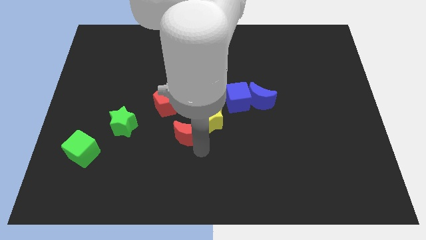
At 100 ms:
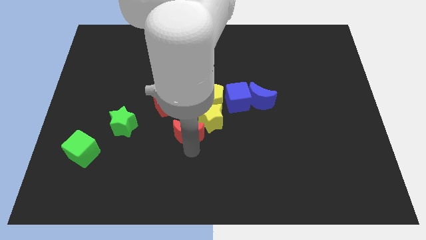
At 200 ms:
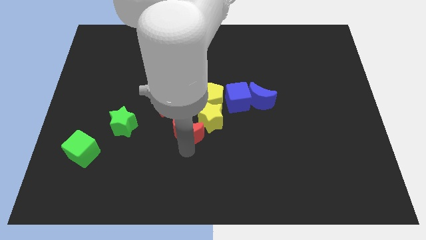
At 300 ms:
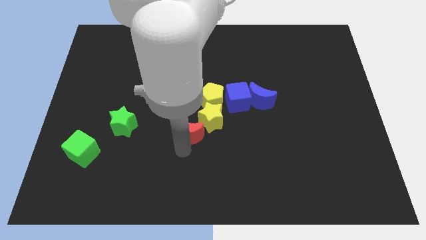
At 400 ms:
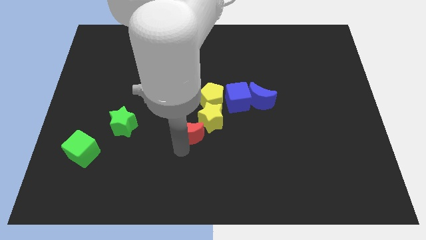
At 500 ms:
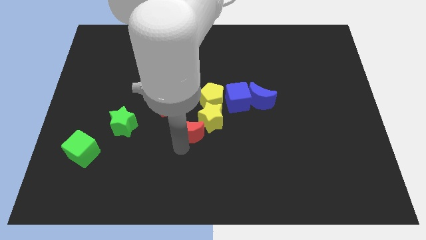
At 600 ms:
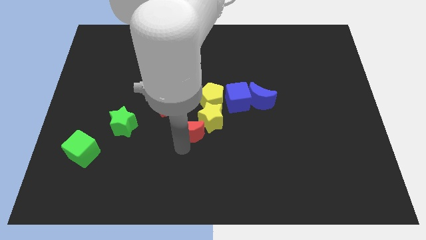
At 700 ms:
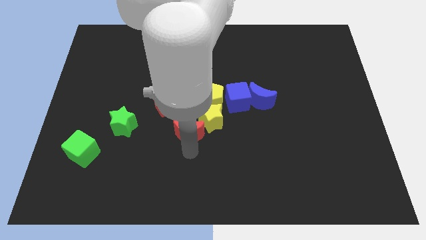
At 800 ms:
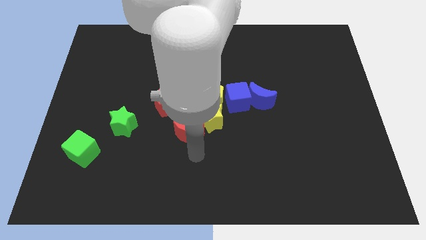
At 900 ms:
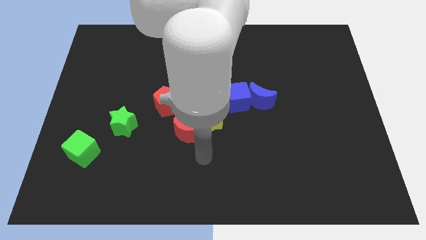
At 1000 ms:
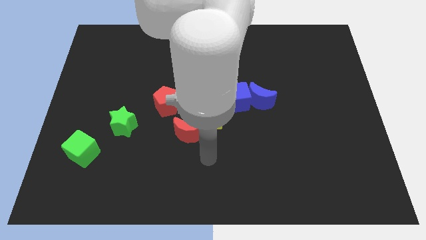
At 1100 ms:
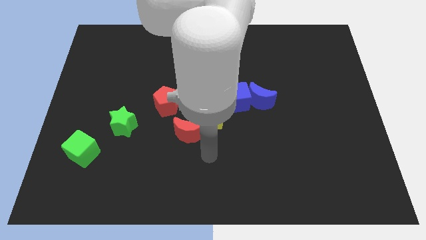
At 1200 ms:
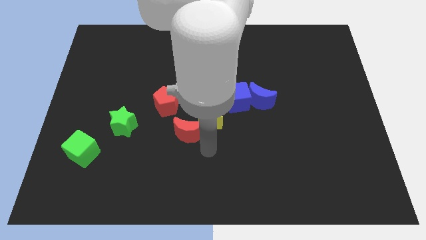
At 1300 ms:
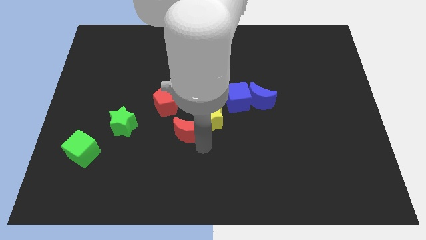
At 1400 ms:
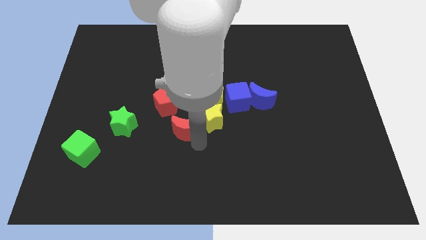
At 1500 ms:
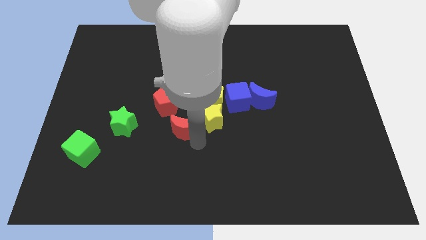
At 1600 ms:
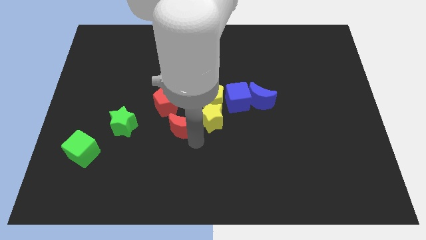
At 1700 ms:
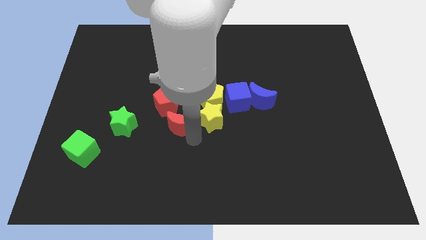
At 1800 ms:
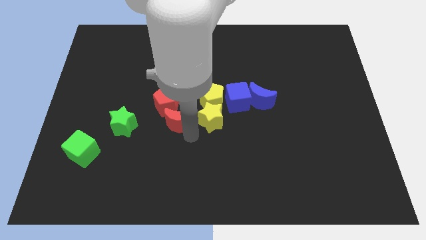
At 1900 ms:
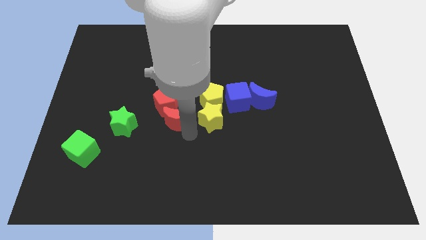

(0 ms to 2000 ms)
put the red moon left to the yellow star

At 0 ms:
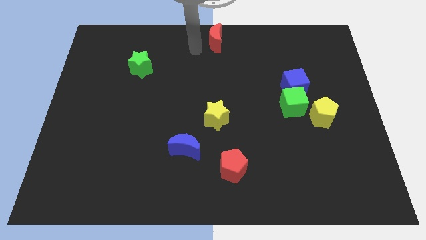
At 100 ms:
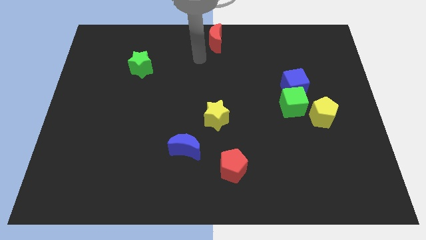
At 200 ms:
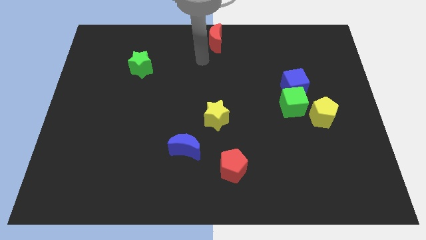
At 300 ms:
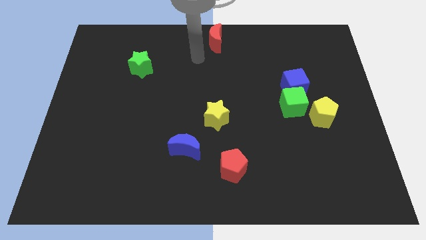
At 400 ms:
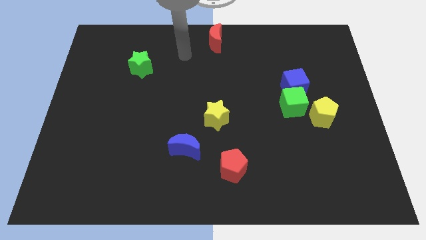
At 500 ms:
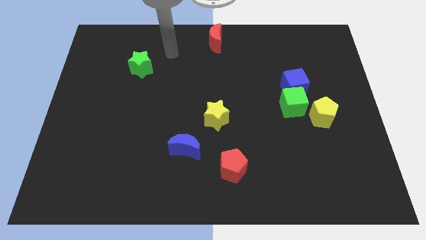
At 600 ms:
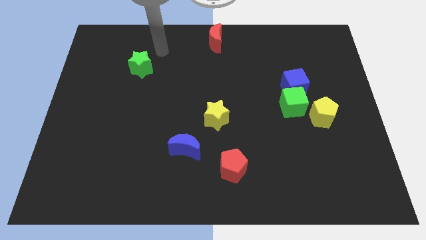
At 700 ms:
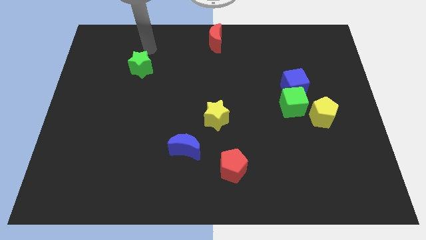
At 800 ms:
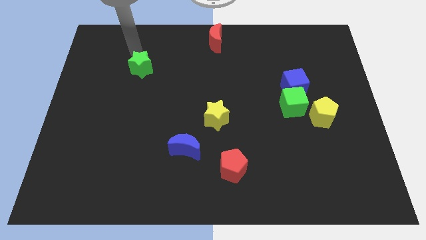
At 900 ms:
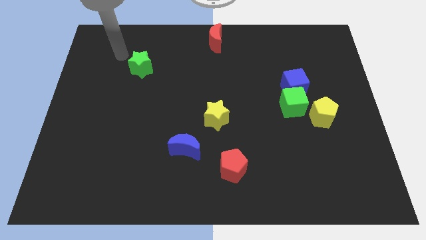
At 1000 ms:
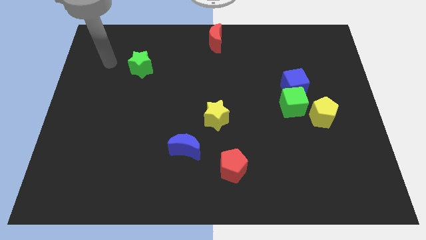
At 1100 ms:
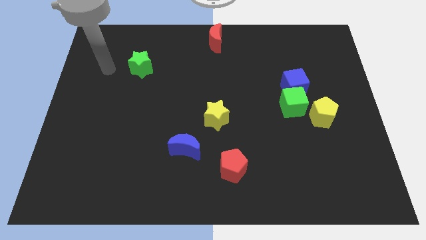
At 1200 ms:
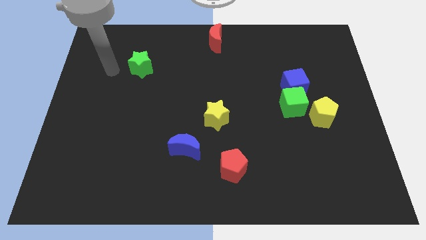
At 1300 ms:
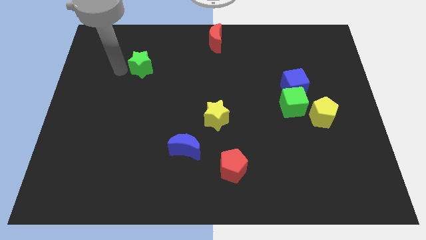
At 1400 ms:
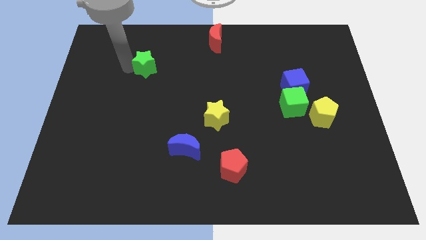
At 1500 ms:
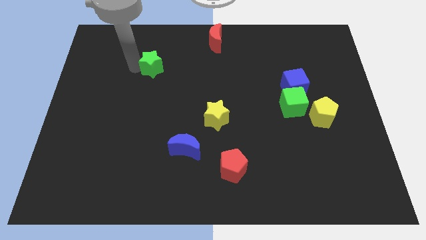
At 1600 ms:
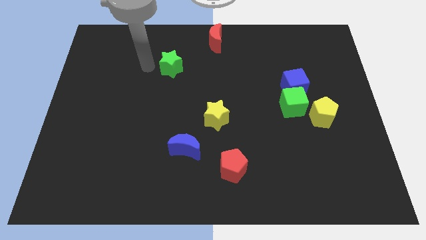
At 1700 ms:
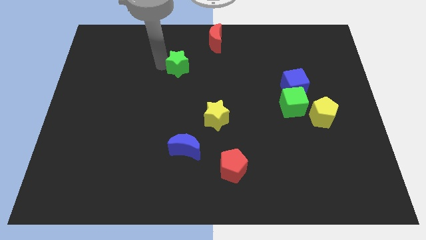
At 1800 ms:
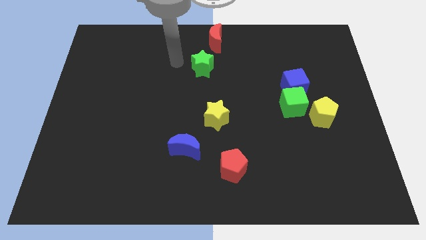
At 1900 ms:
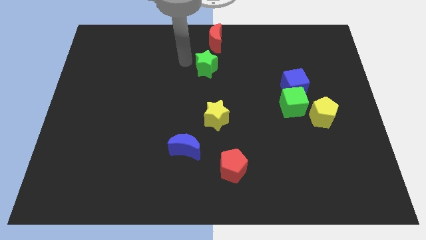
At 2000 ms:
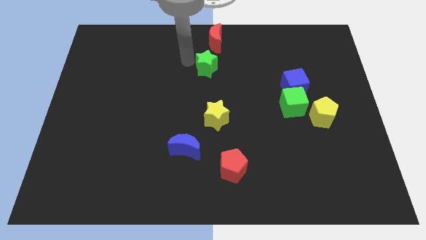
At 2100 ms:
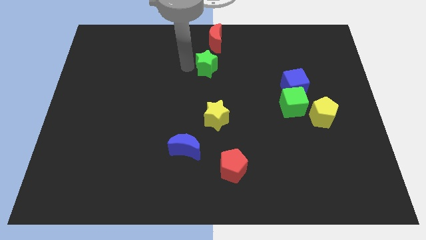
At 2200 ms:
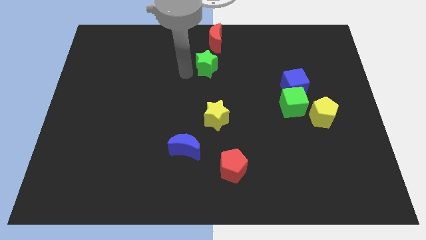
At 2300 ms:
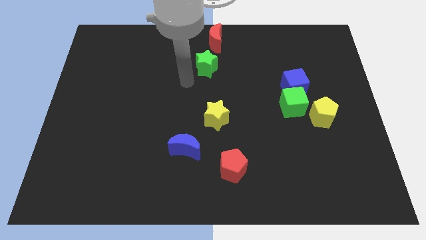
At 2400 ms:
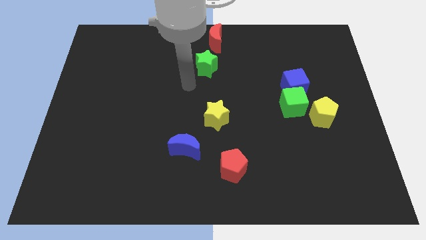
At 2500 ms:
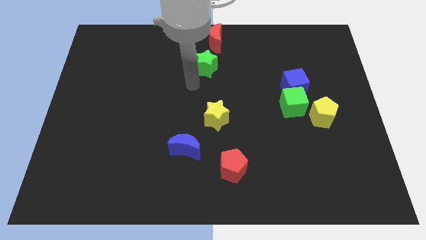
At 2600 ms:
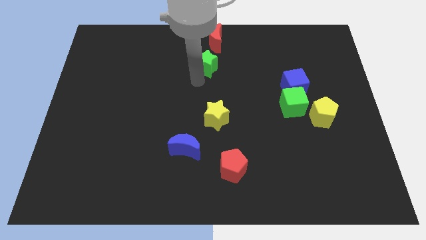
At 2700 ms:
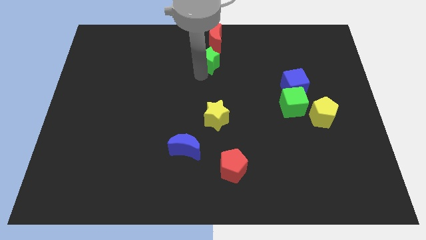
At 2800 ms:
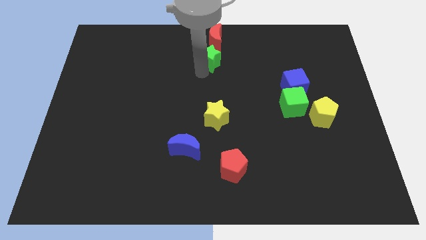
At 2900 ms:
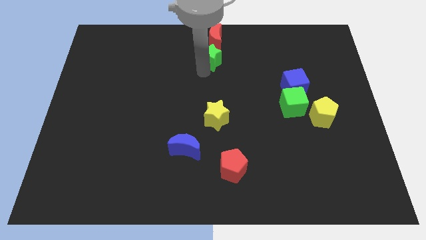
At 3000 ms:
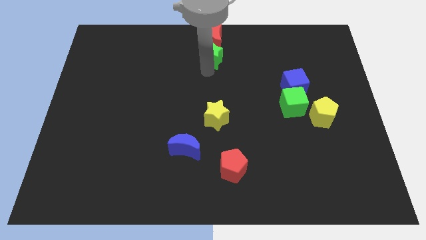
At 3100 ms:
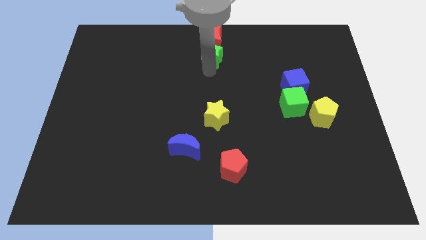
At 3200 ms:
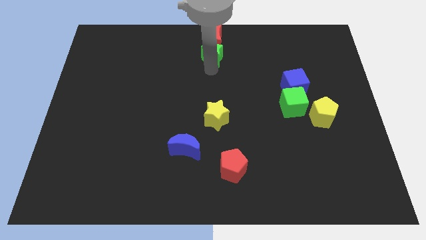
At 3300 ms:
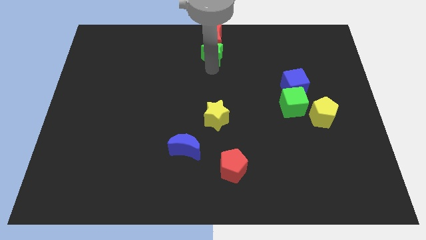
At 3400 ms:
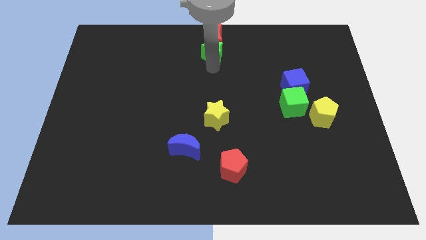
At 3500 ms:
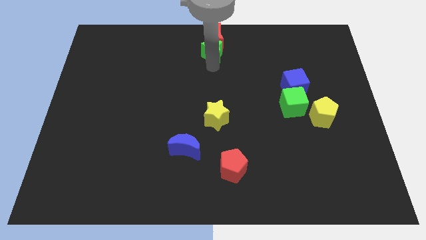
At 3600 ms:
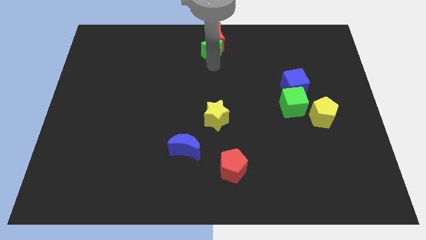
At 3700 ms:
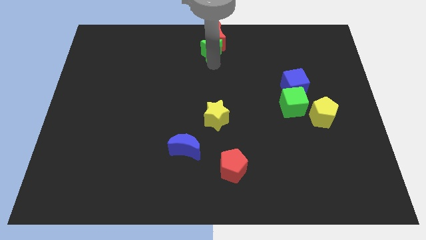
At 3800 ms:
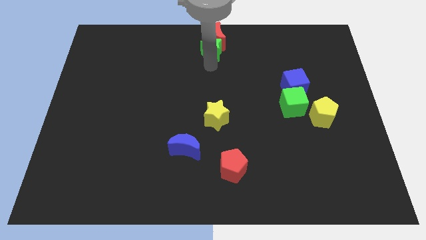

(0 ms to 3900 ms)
move the green star into the red moon

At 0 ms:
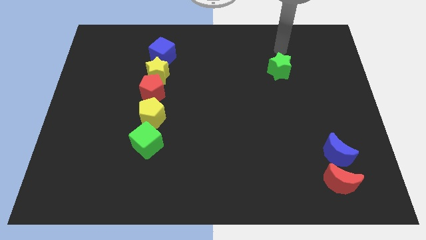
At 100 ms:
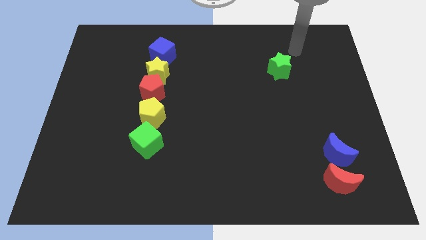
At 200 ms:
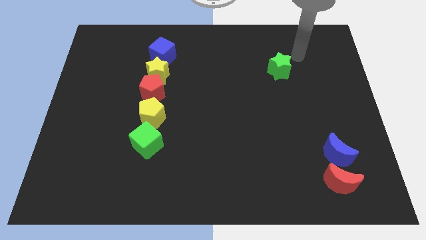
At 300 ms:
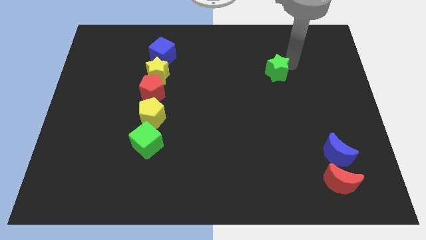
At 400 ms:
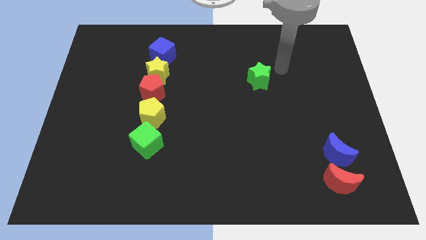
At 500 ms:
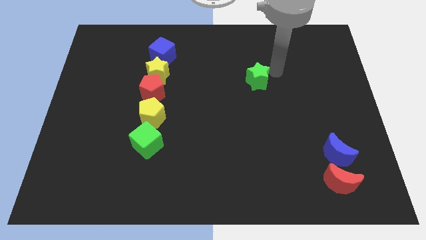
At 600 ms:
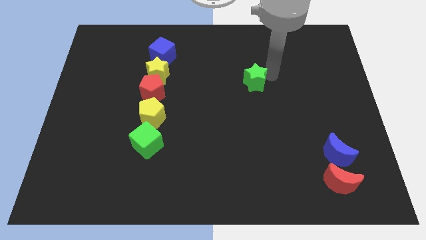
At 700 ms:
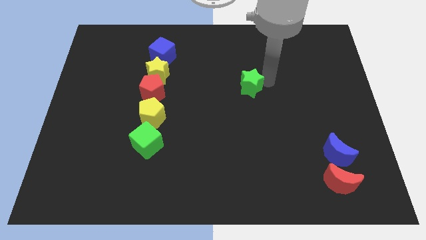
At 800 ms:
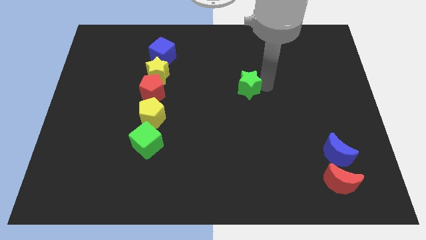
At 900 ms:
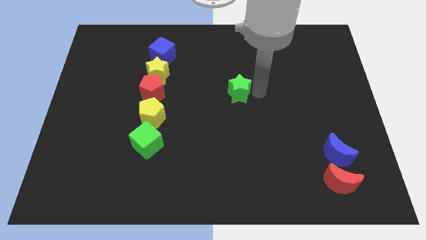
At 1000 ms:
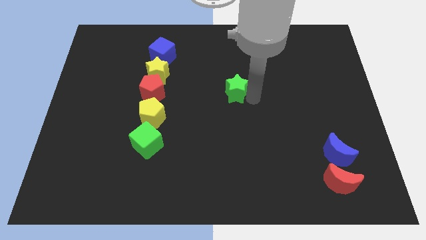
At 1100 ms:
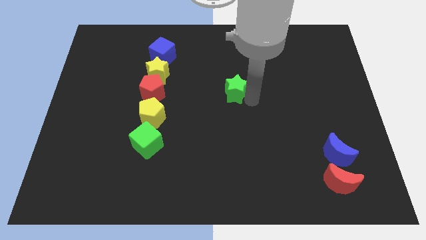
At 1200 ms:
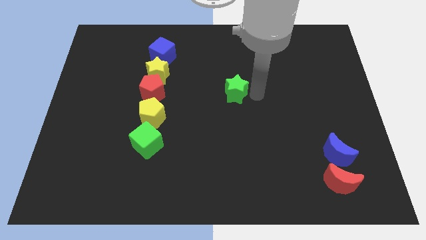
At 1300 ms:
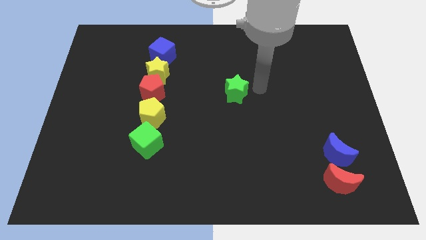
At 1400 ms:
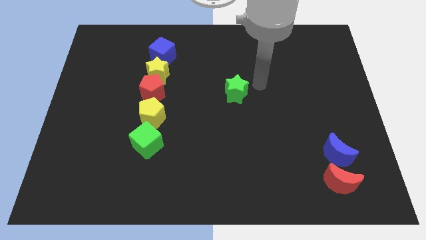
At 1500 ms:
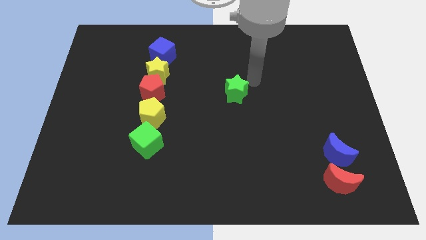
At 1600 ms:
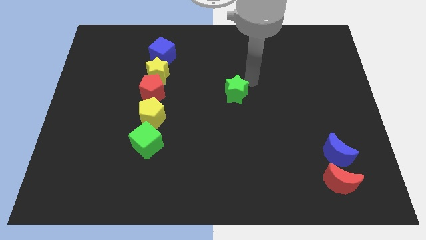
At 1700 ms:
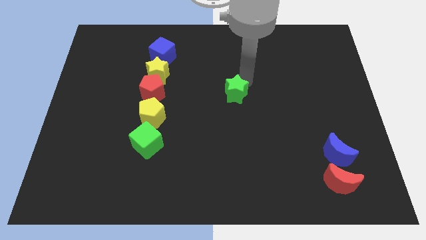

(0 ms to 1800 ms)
place the green star to the center

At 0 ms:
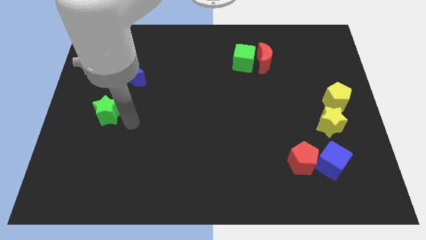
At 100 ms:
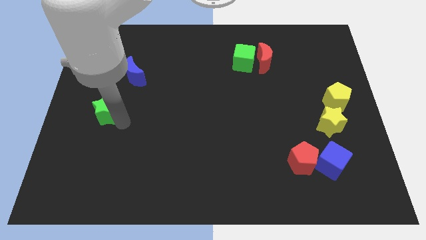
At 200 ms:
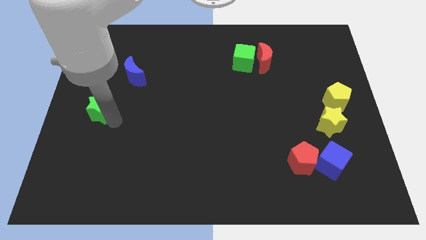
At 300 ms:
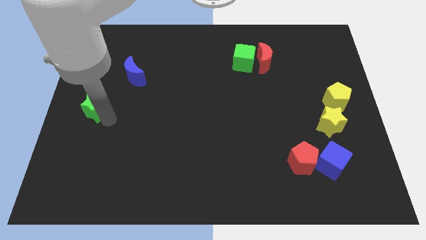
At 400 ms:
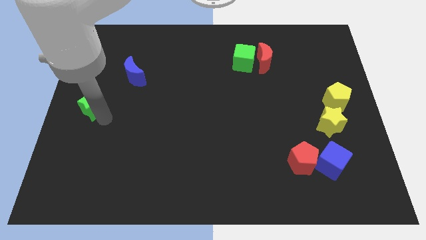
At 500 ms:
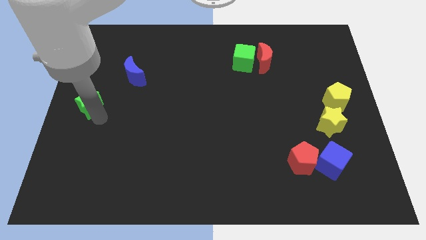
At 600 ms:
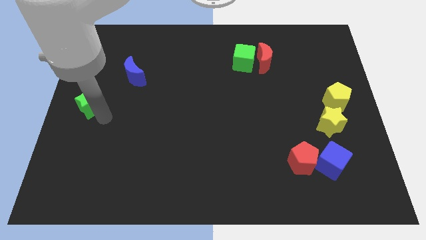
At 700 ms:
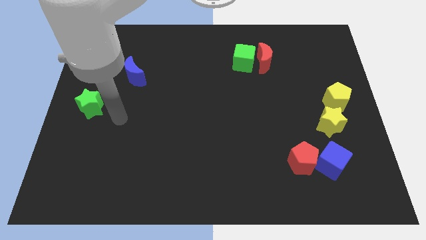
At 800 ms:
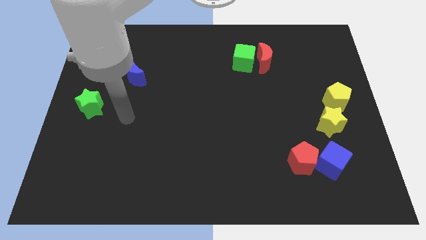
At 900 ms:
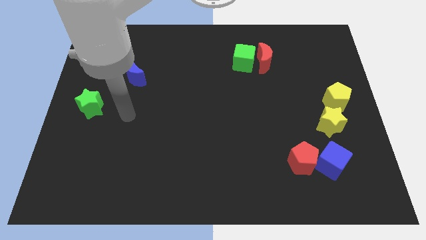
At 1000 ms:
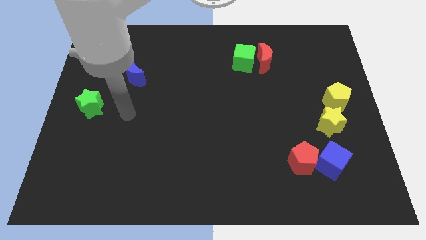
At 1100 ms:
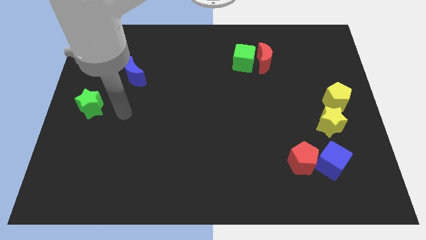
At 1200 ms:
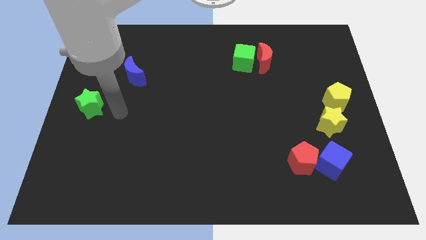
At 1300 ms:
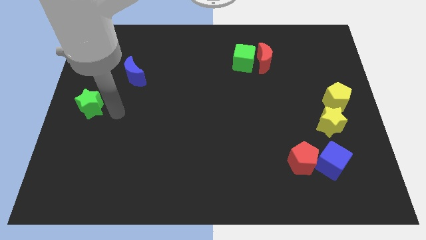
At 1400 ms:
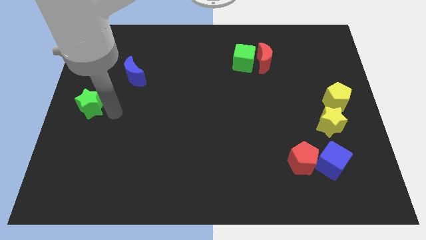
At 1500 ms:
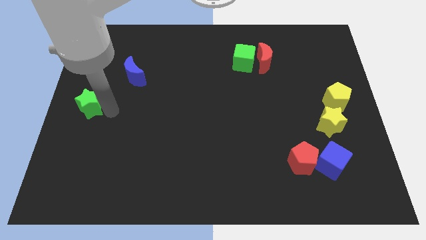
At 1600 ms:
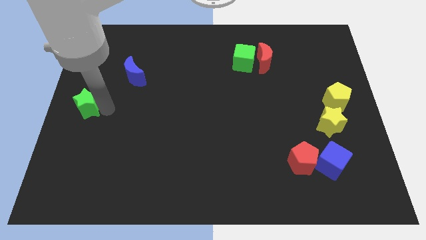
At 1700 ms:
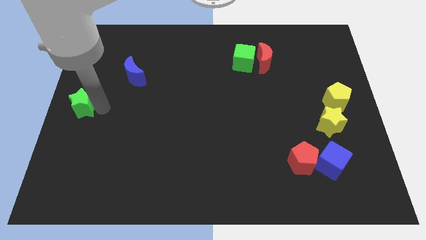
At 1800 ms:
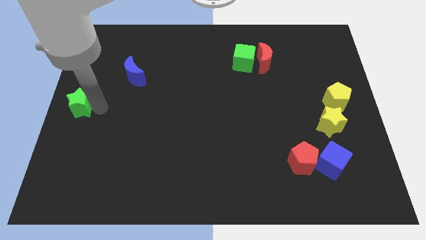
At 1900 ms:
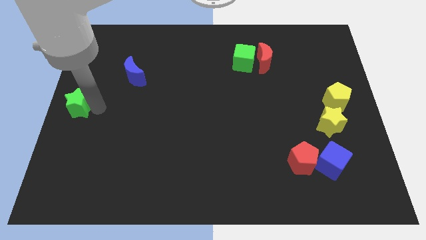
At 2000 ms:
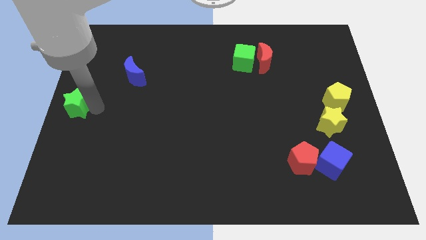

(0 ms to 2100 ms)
push the green star to the left center of the board
